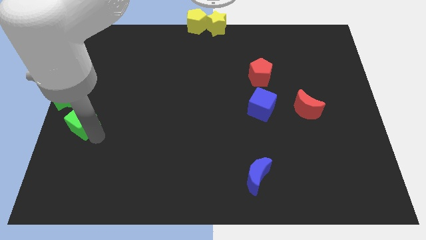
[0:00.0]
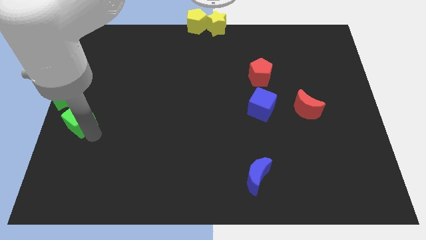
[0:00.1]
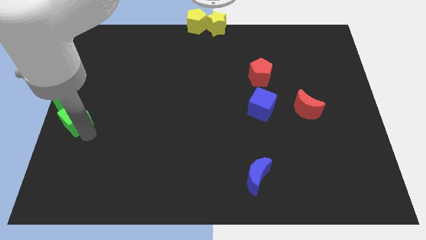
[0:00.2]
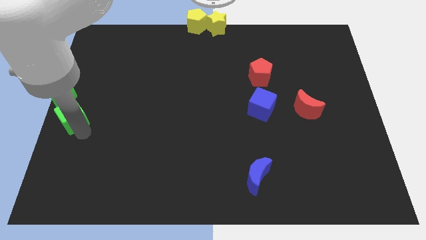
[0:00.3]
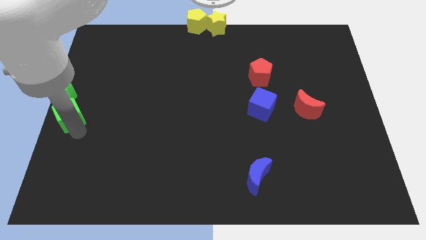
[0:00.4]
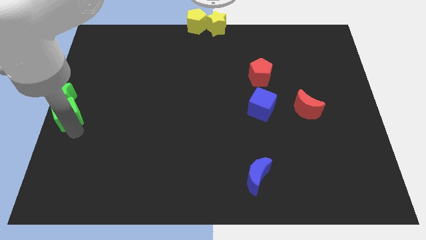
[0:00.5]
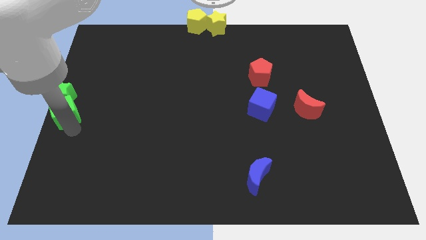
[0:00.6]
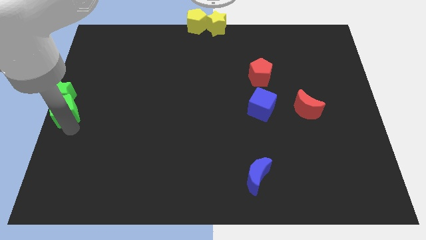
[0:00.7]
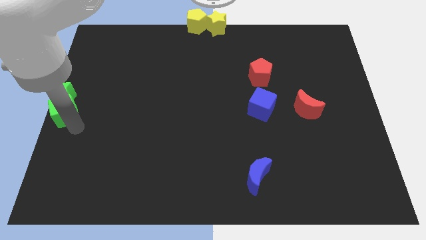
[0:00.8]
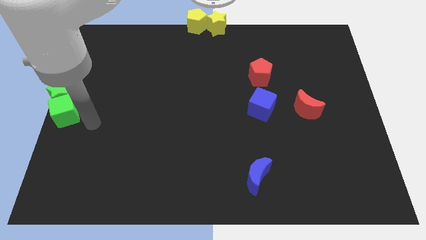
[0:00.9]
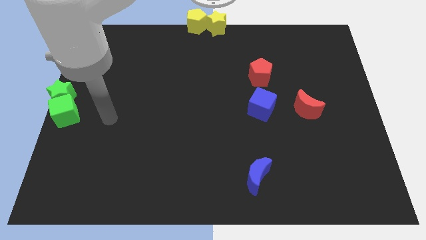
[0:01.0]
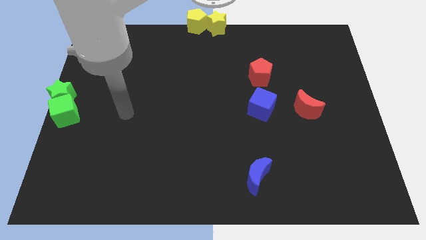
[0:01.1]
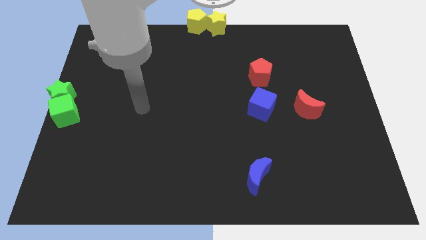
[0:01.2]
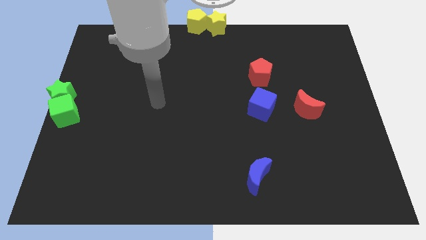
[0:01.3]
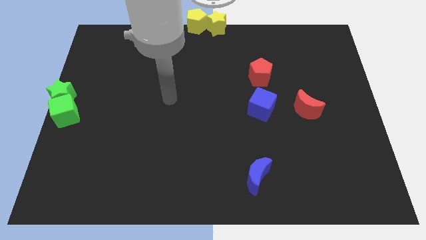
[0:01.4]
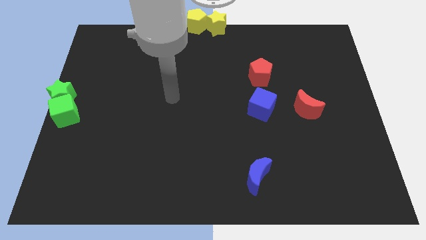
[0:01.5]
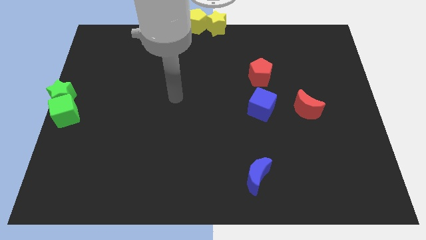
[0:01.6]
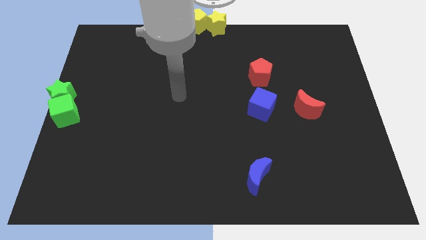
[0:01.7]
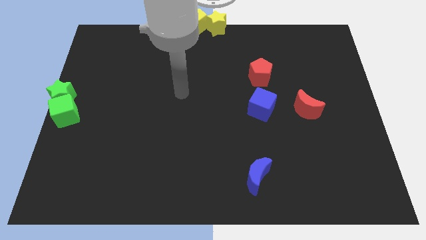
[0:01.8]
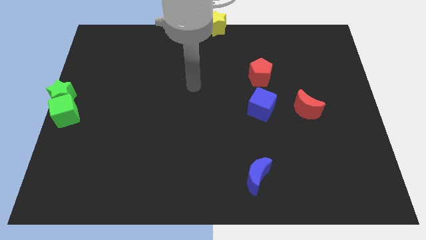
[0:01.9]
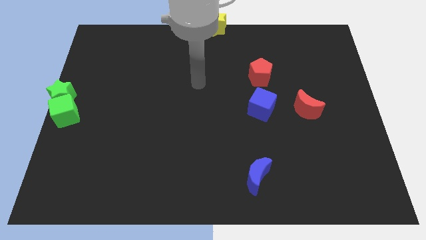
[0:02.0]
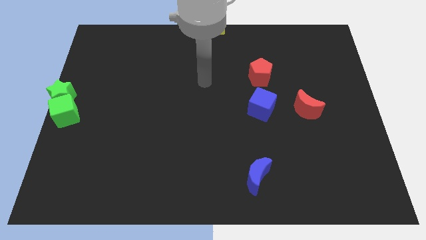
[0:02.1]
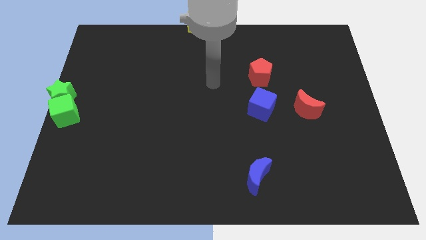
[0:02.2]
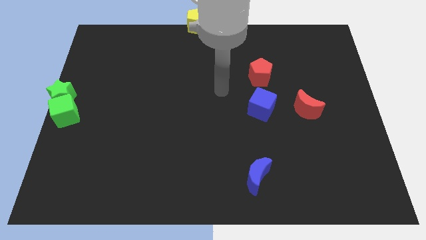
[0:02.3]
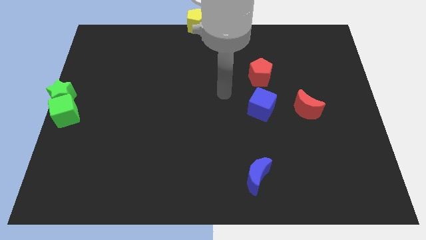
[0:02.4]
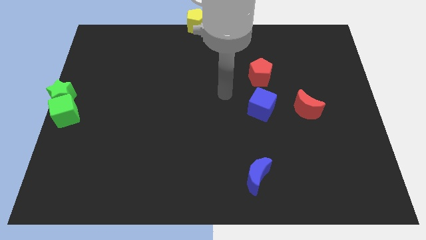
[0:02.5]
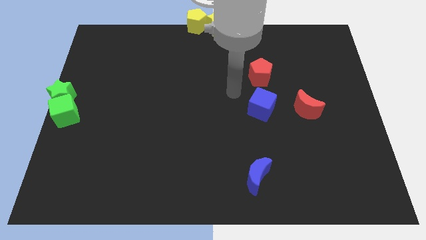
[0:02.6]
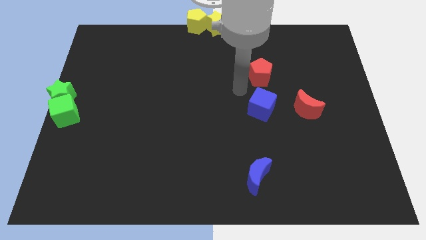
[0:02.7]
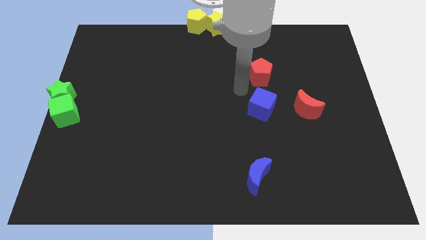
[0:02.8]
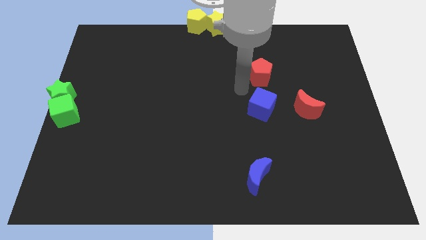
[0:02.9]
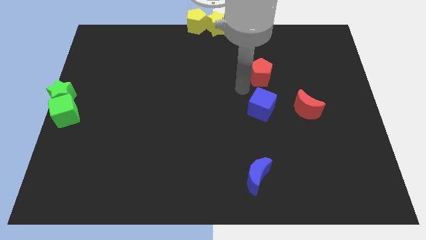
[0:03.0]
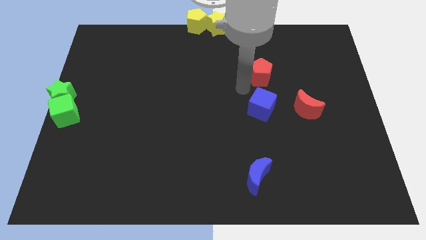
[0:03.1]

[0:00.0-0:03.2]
push the green cube close to the green star

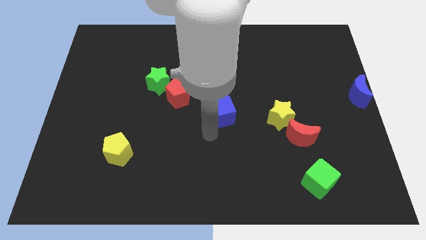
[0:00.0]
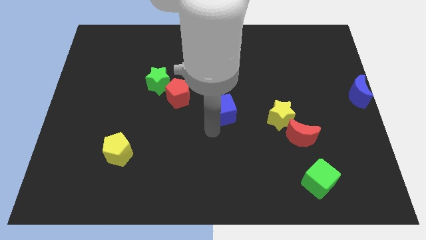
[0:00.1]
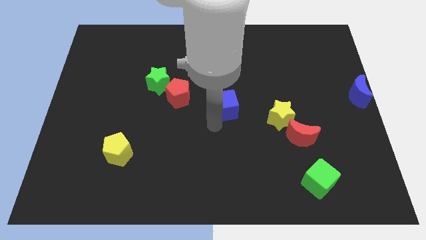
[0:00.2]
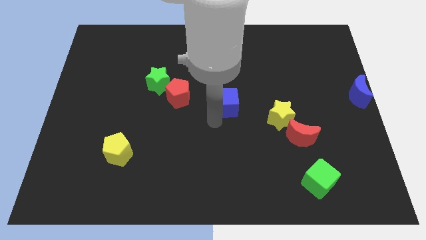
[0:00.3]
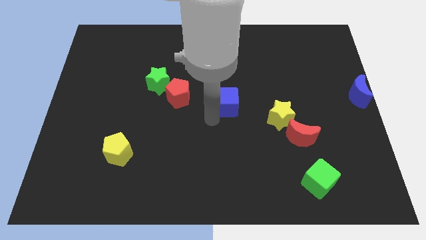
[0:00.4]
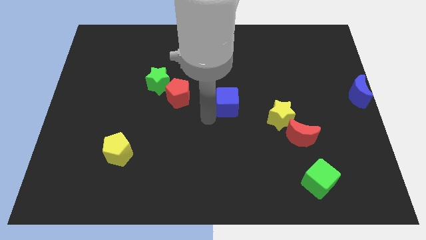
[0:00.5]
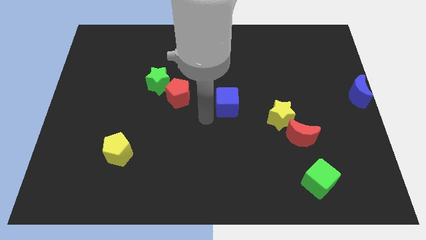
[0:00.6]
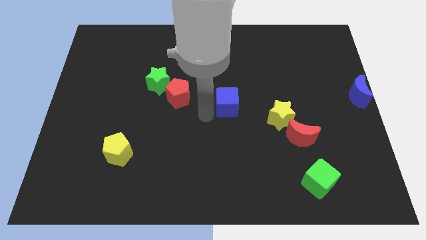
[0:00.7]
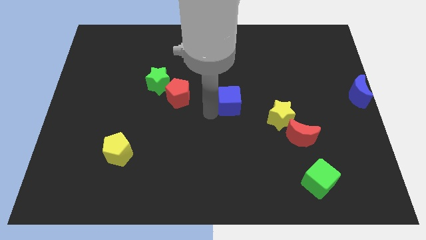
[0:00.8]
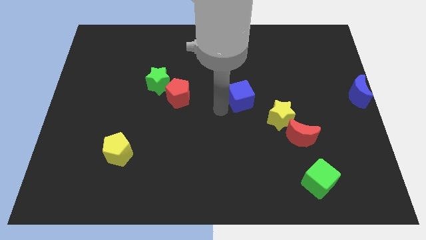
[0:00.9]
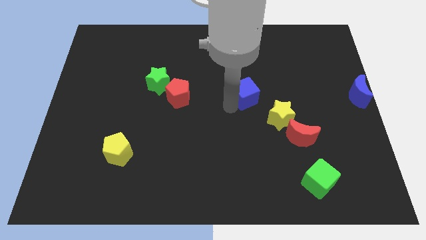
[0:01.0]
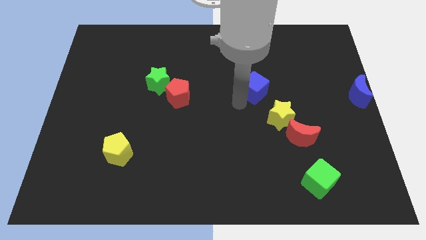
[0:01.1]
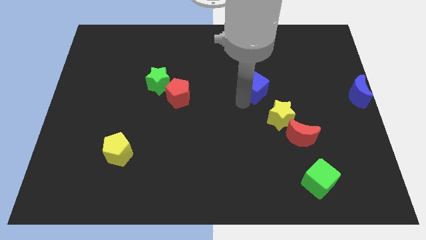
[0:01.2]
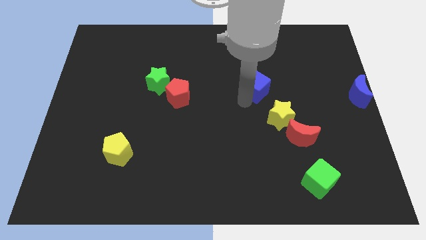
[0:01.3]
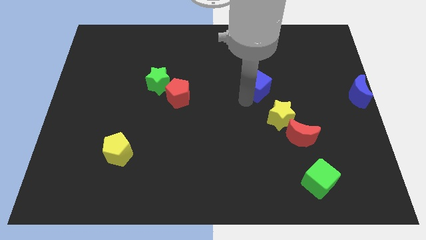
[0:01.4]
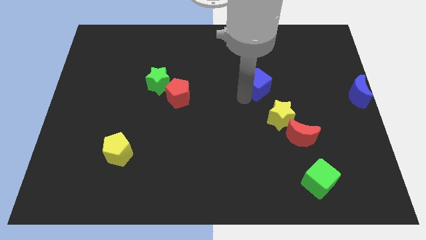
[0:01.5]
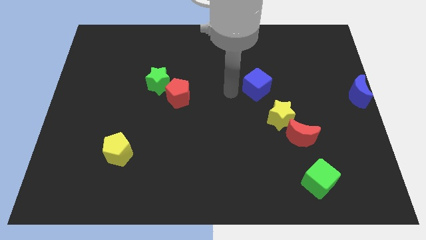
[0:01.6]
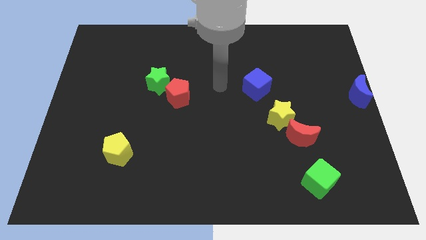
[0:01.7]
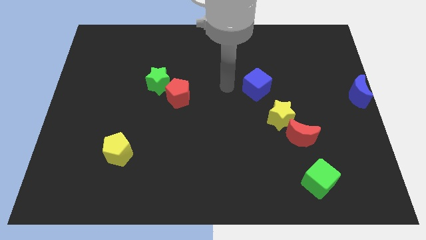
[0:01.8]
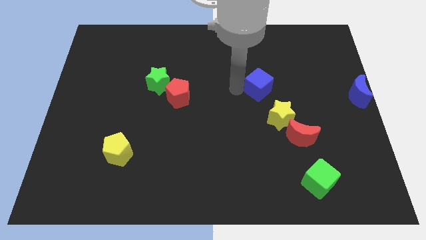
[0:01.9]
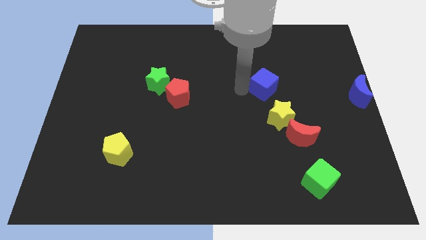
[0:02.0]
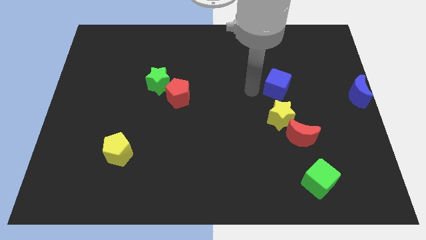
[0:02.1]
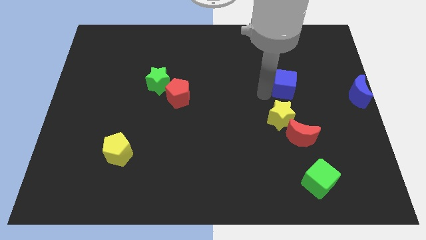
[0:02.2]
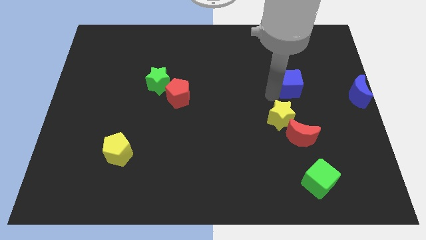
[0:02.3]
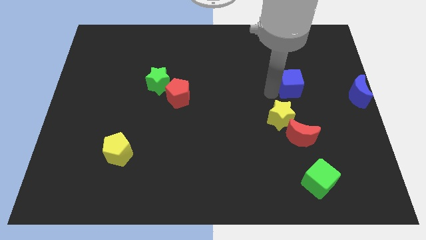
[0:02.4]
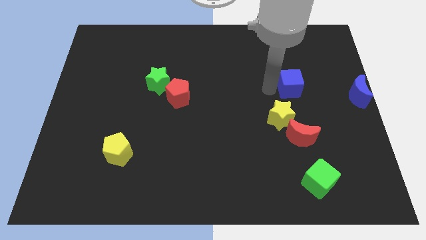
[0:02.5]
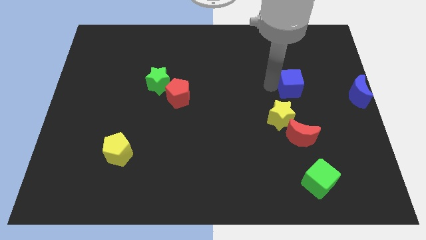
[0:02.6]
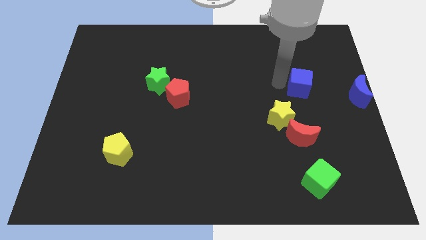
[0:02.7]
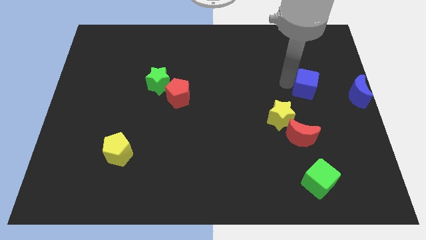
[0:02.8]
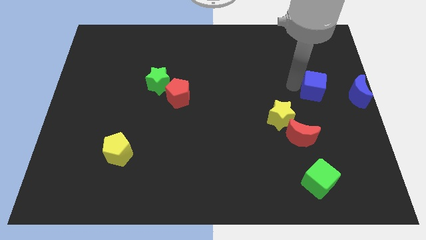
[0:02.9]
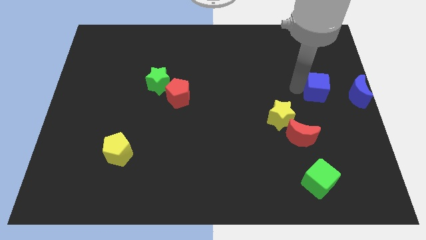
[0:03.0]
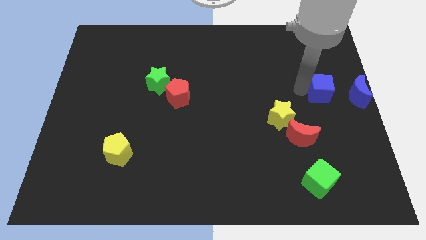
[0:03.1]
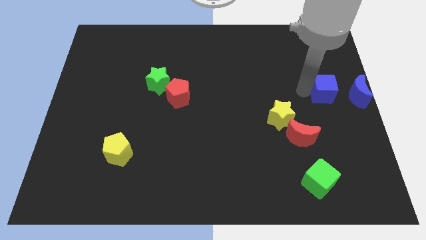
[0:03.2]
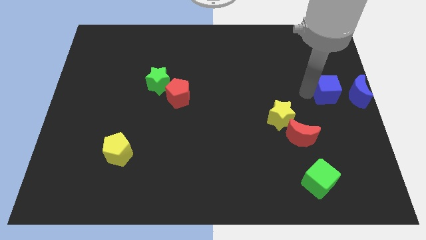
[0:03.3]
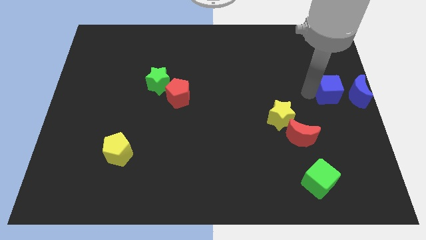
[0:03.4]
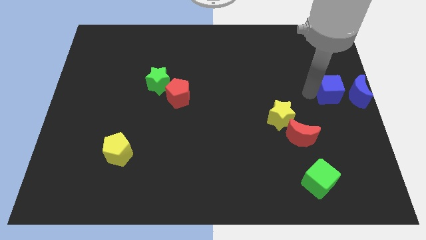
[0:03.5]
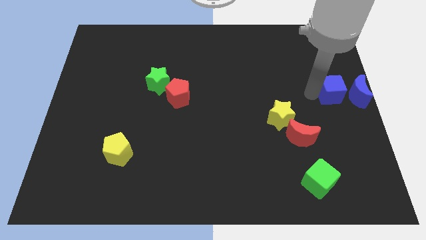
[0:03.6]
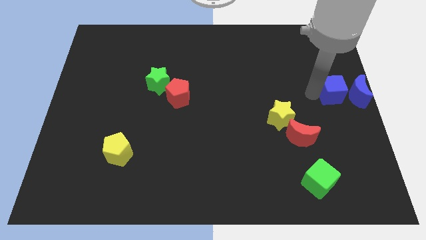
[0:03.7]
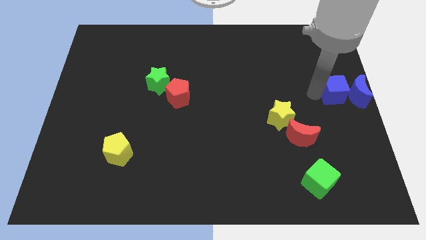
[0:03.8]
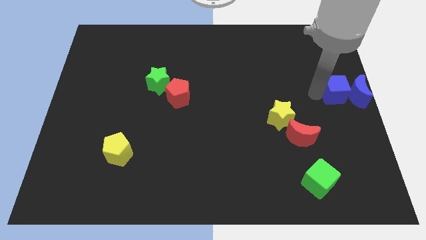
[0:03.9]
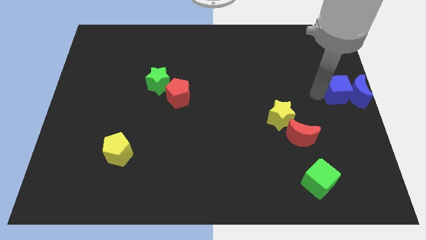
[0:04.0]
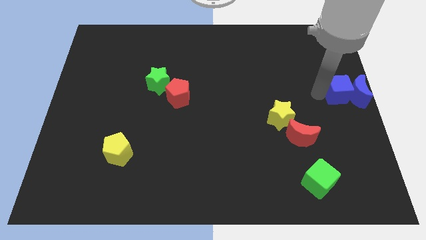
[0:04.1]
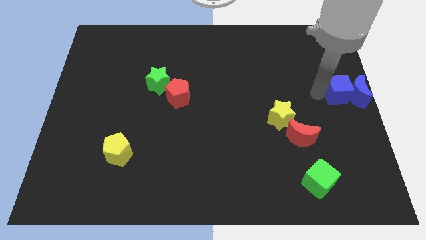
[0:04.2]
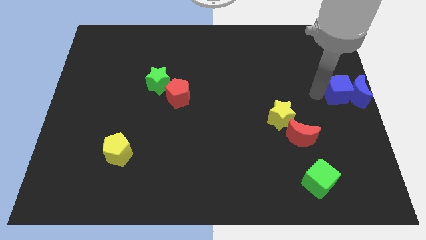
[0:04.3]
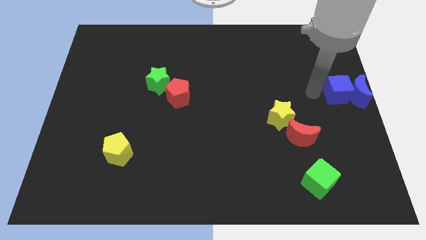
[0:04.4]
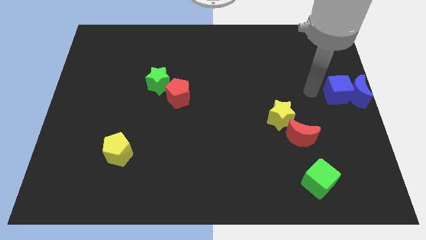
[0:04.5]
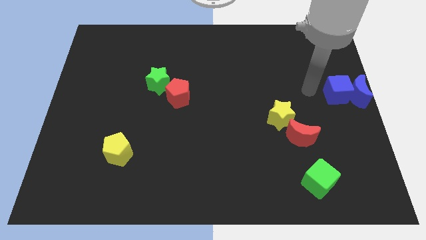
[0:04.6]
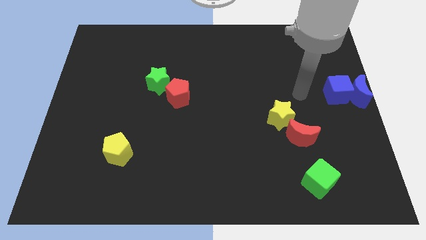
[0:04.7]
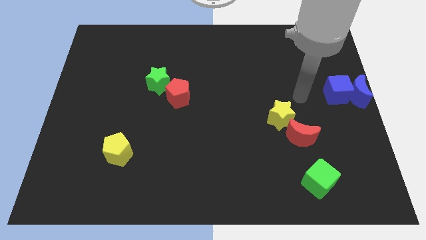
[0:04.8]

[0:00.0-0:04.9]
push the blue cube towards the blue moon

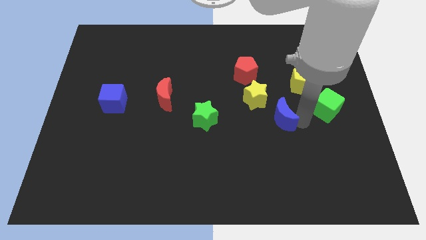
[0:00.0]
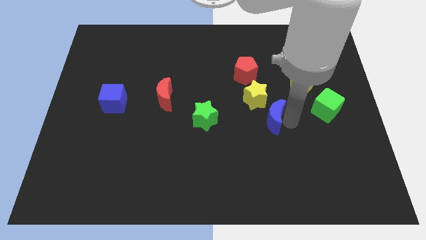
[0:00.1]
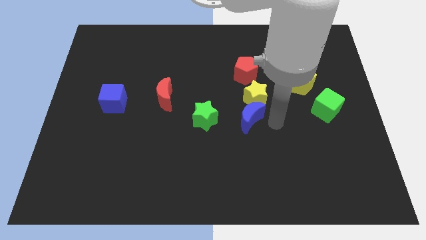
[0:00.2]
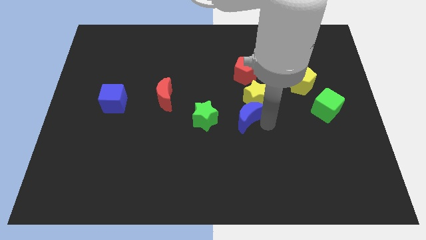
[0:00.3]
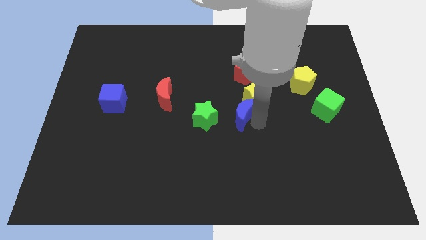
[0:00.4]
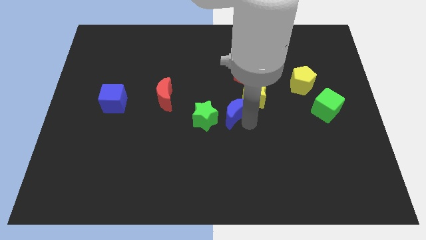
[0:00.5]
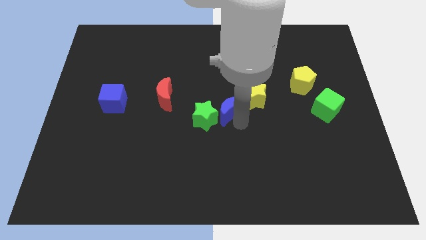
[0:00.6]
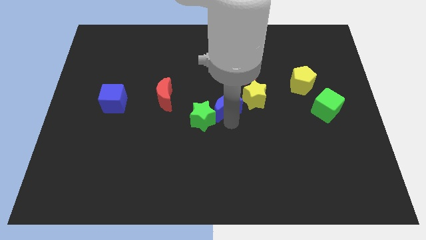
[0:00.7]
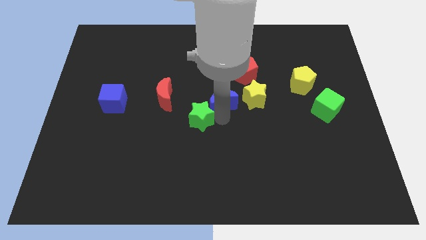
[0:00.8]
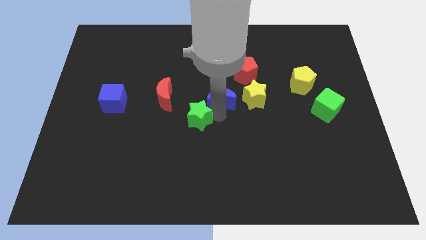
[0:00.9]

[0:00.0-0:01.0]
push blue crescent beside yellow star
